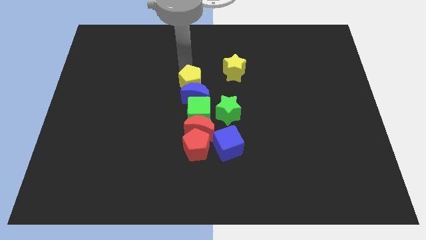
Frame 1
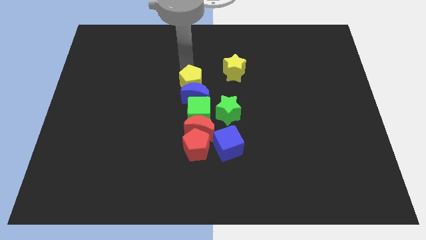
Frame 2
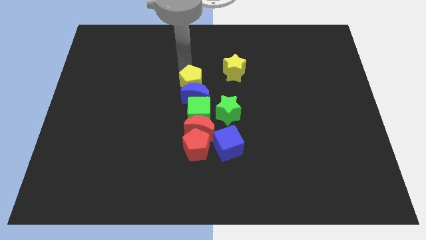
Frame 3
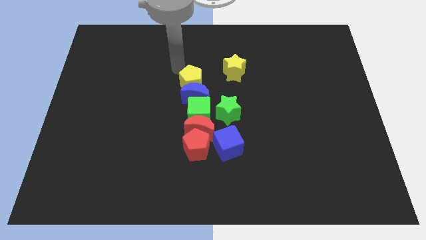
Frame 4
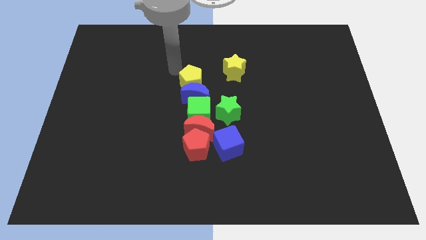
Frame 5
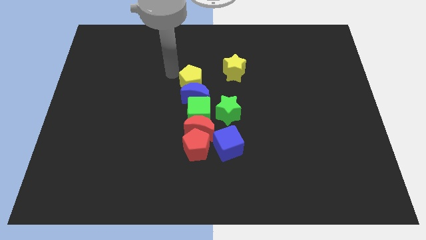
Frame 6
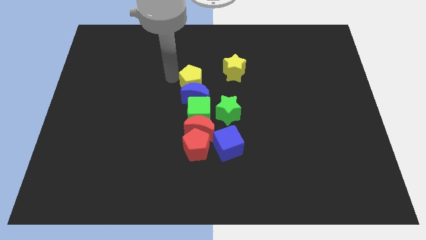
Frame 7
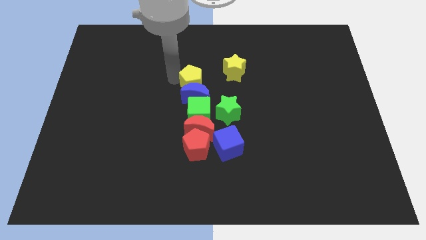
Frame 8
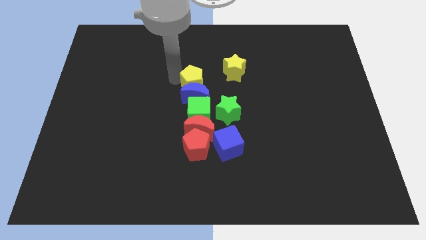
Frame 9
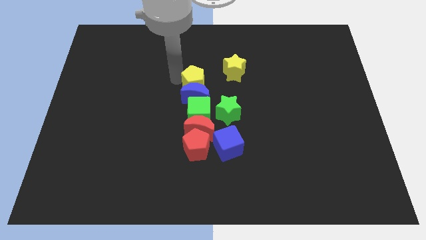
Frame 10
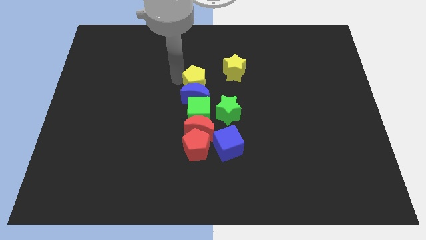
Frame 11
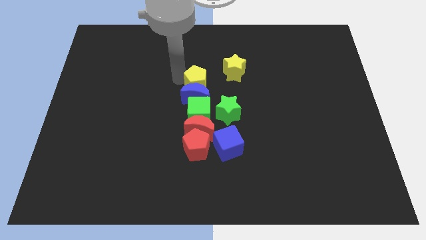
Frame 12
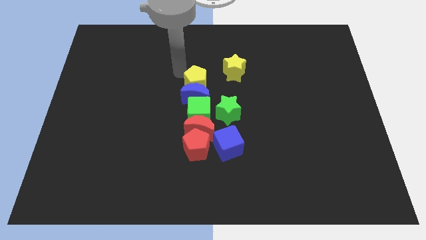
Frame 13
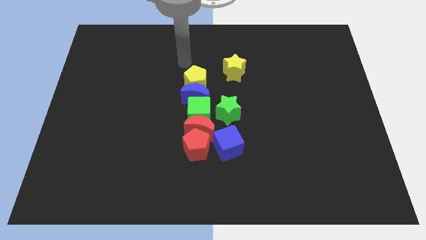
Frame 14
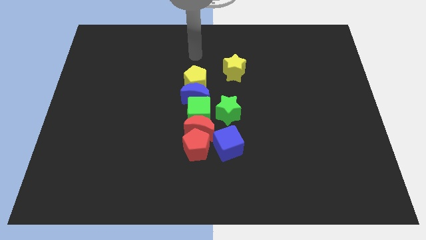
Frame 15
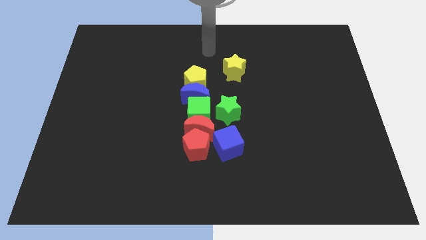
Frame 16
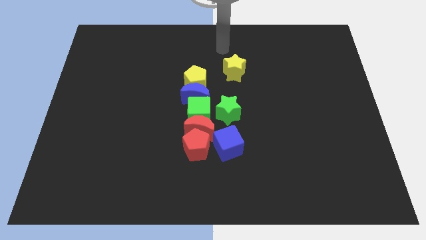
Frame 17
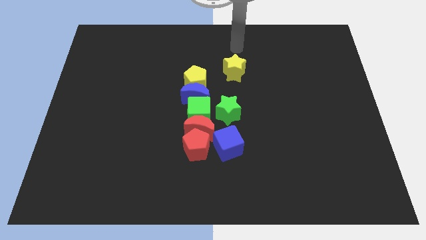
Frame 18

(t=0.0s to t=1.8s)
slightly push the yellow pentagon into the blue moon

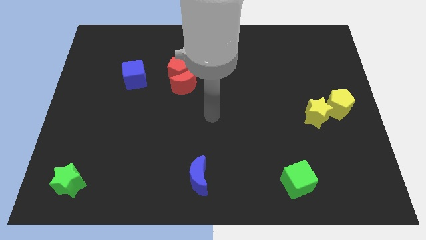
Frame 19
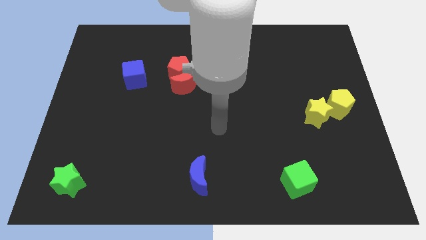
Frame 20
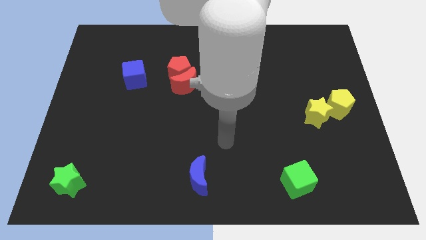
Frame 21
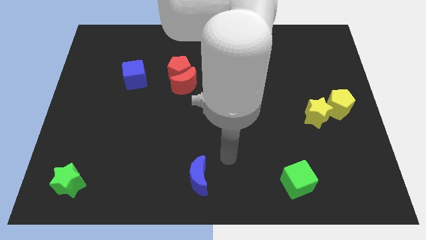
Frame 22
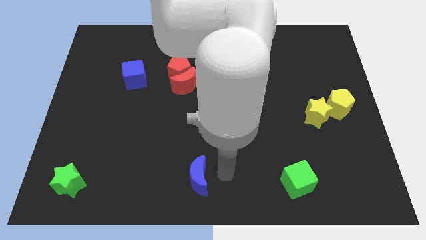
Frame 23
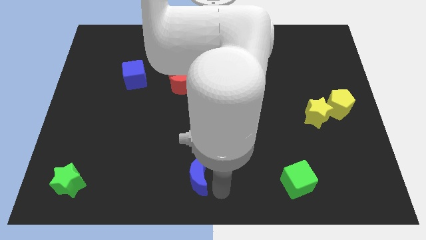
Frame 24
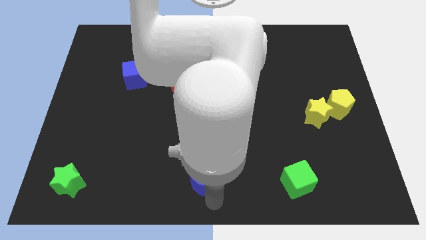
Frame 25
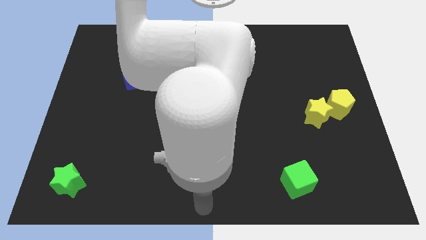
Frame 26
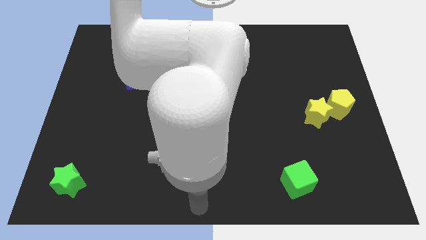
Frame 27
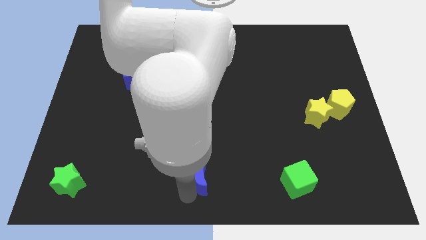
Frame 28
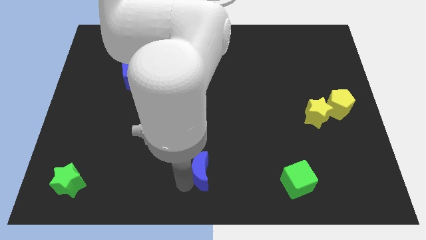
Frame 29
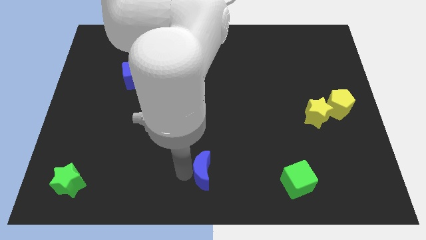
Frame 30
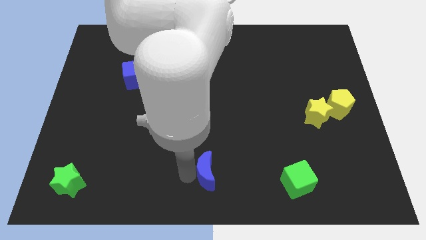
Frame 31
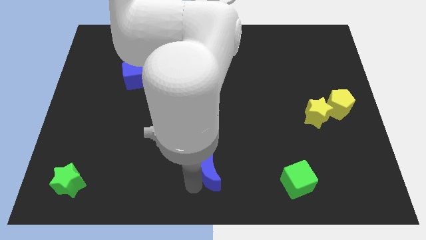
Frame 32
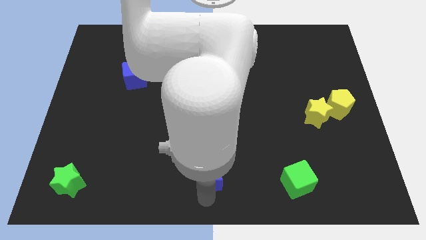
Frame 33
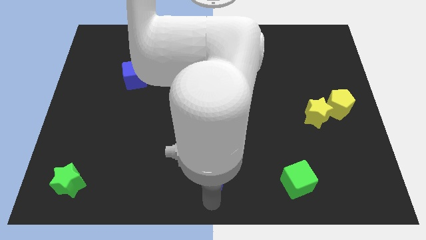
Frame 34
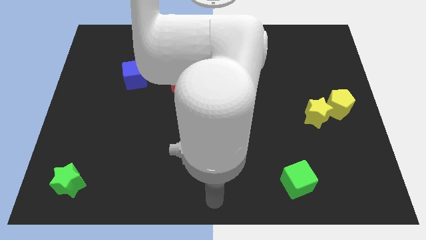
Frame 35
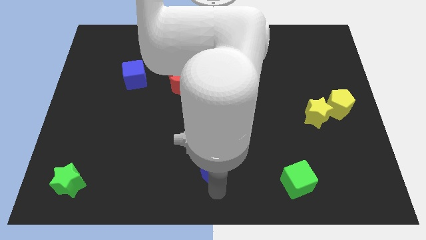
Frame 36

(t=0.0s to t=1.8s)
slightly push the blue crescent towards the top of the board

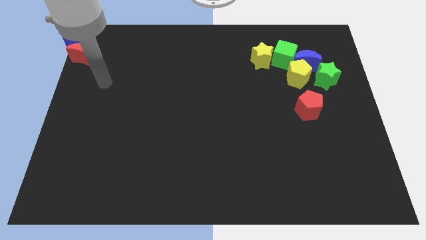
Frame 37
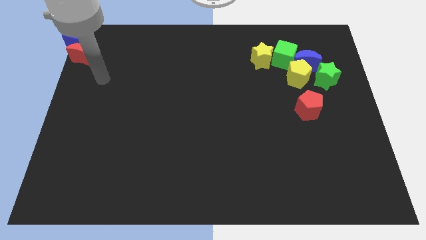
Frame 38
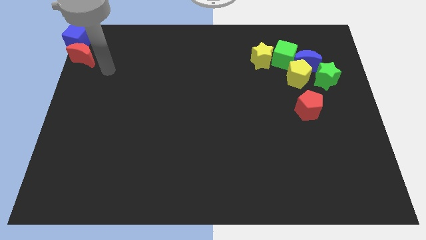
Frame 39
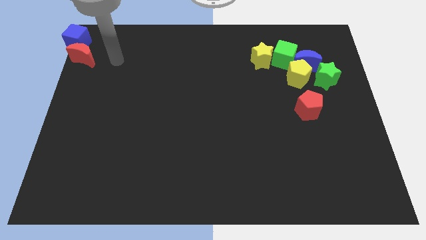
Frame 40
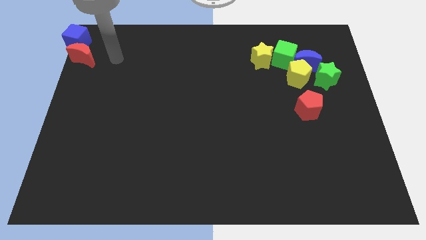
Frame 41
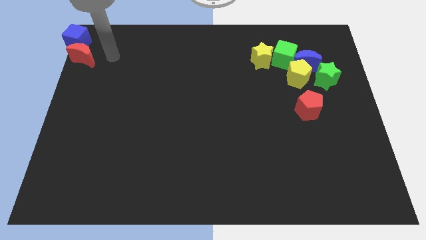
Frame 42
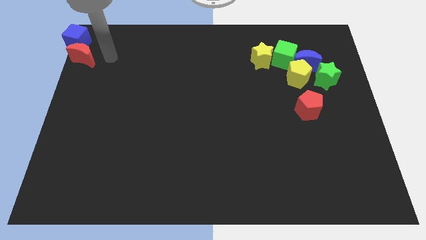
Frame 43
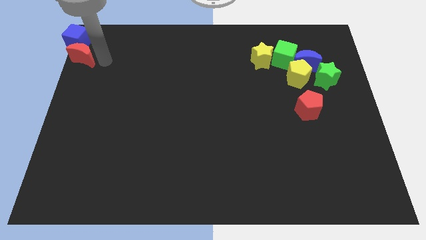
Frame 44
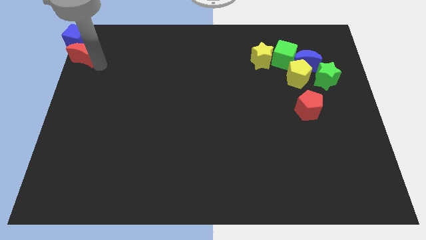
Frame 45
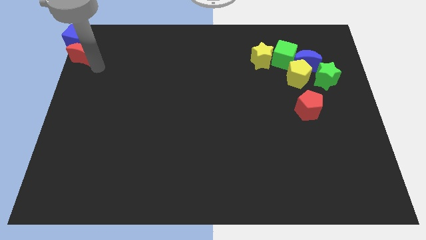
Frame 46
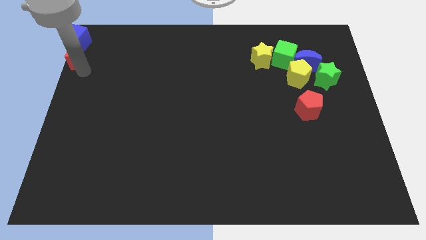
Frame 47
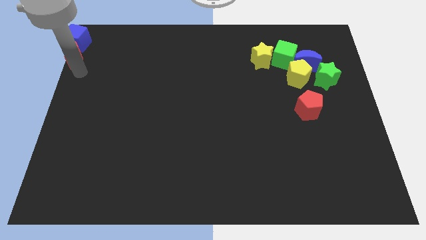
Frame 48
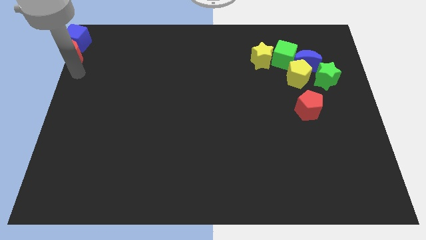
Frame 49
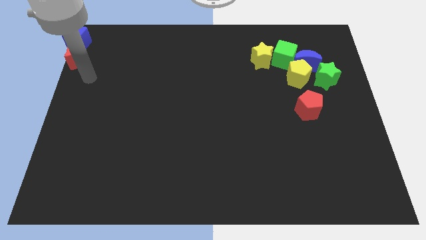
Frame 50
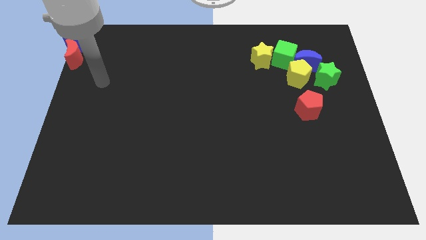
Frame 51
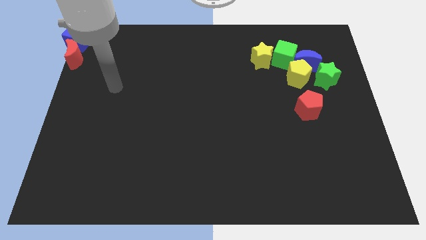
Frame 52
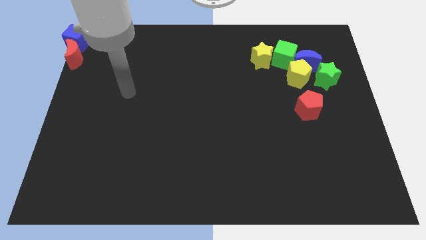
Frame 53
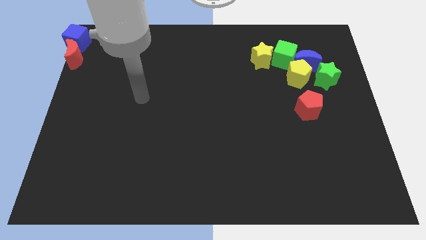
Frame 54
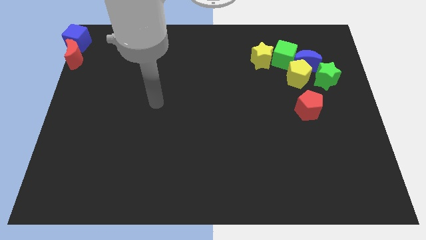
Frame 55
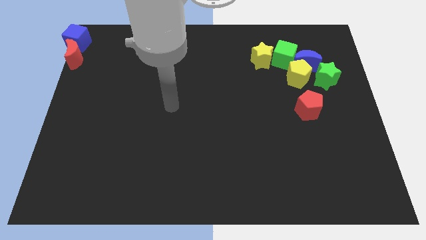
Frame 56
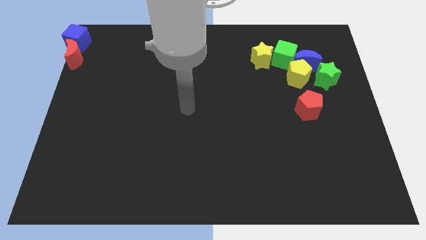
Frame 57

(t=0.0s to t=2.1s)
place the red crescent below the blue cube

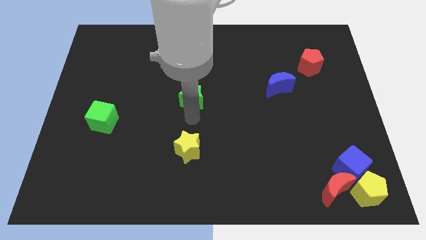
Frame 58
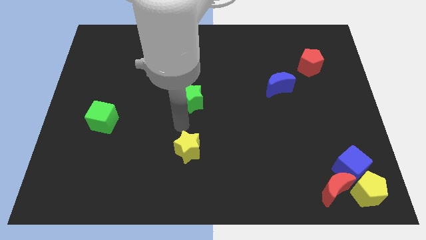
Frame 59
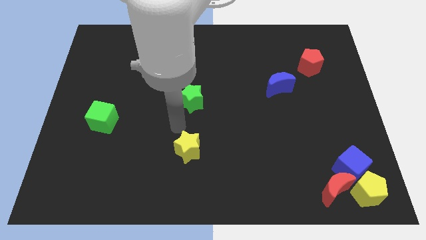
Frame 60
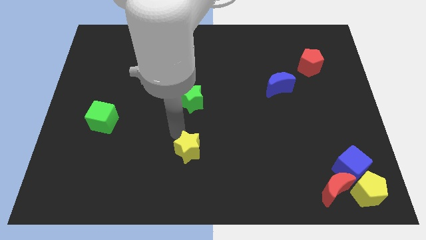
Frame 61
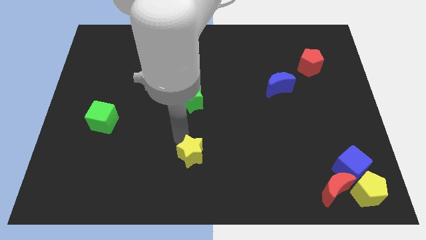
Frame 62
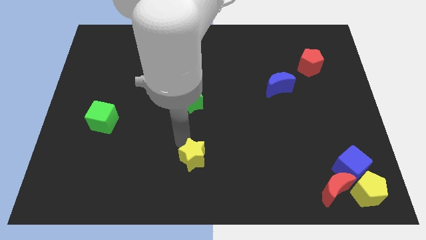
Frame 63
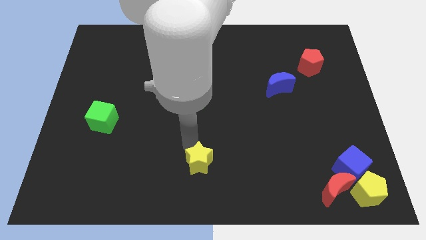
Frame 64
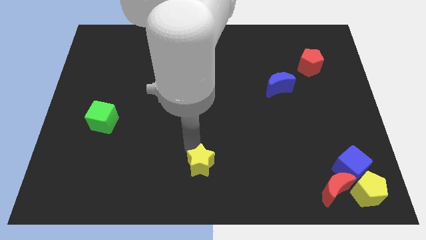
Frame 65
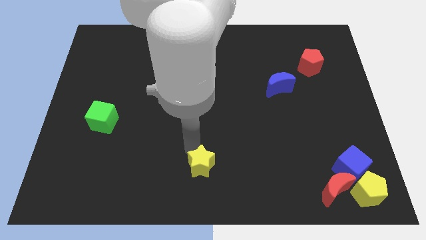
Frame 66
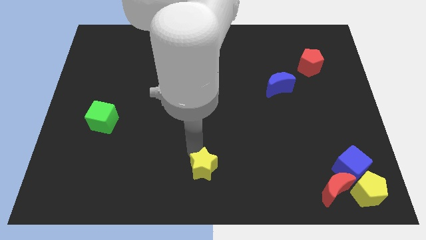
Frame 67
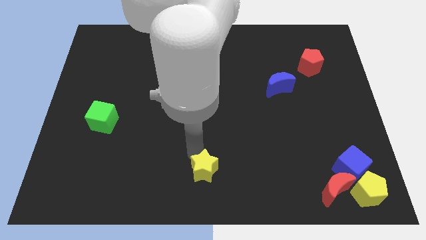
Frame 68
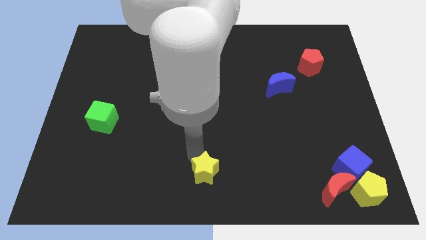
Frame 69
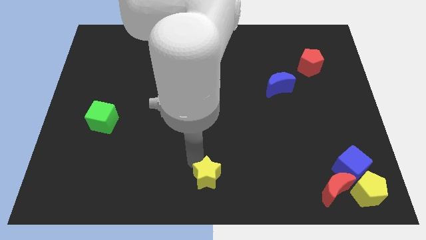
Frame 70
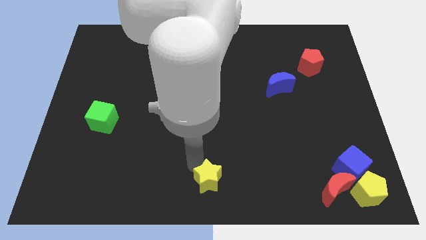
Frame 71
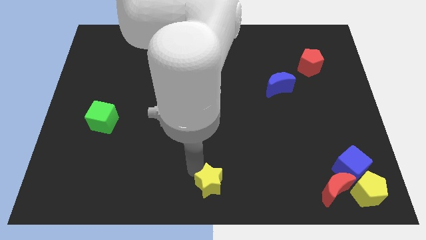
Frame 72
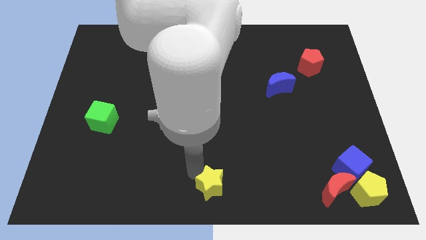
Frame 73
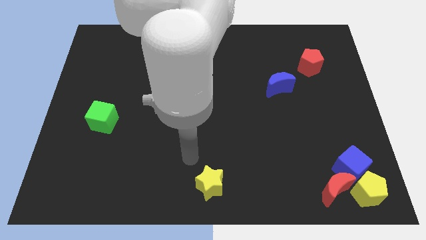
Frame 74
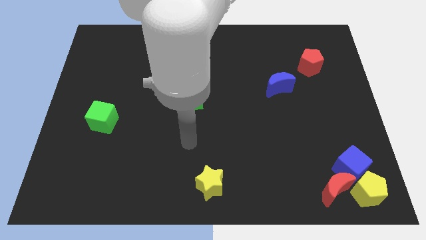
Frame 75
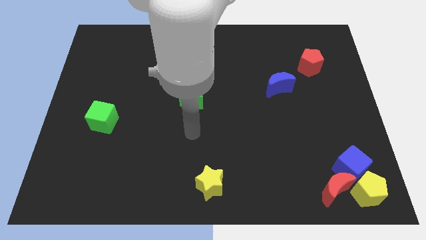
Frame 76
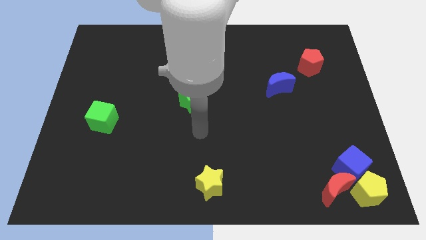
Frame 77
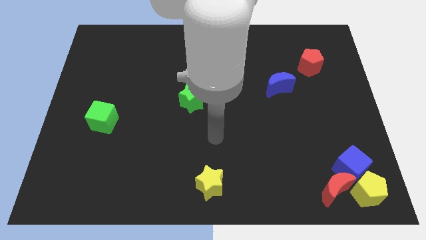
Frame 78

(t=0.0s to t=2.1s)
drag the yellow star to the bottom center of the board

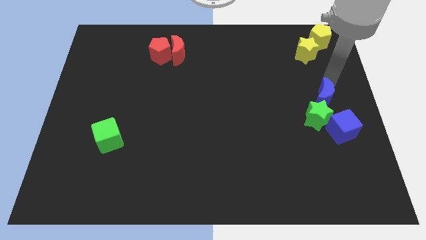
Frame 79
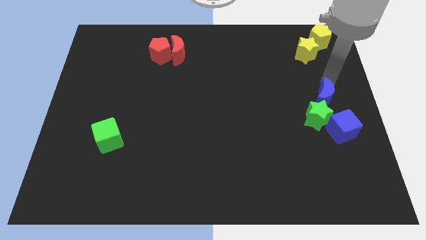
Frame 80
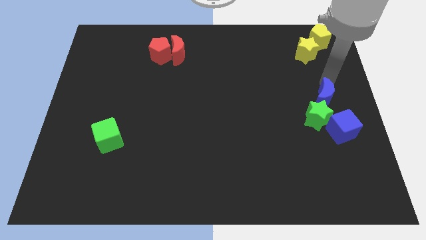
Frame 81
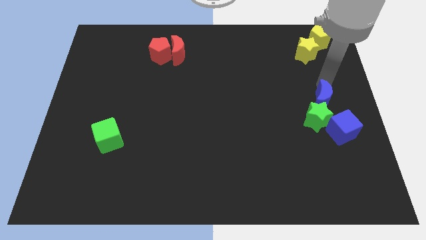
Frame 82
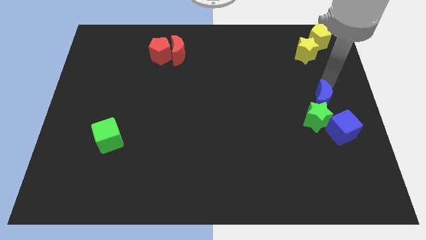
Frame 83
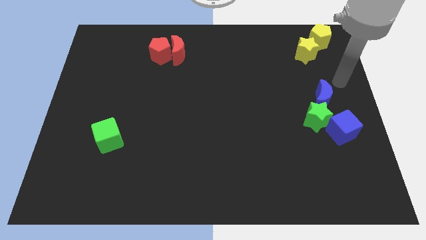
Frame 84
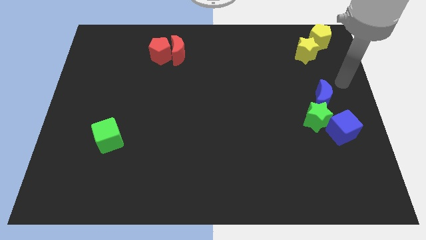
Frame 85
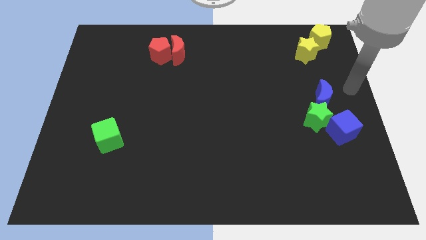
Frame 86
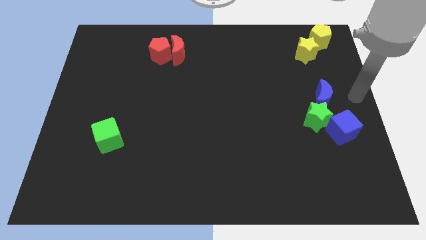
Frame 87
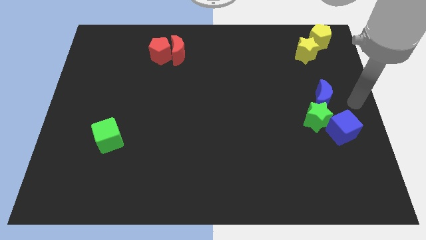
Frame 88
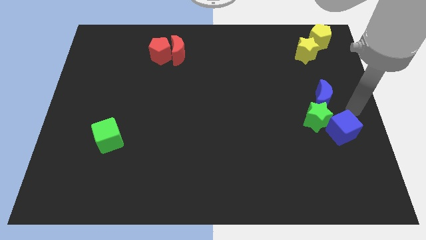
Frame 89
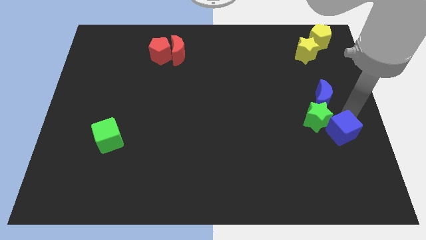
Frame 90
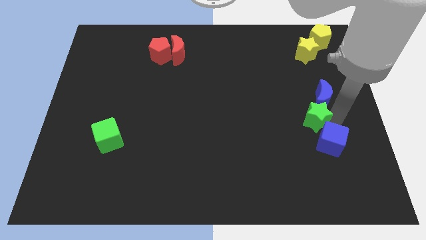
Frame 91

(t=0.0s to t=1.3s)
place your arm on right side of the blue cube
